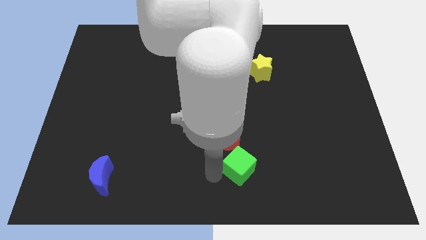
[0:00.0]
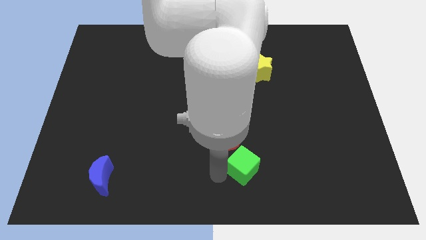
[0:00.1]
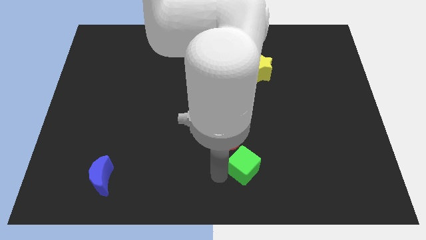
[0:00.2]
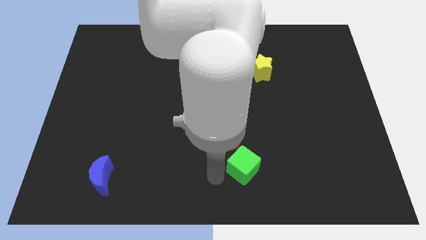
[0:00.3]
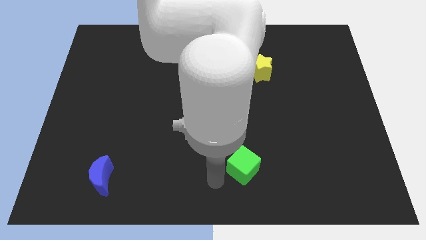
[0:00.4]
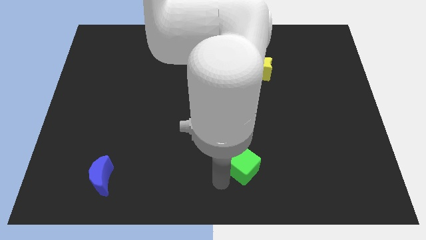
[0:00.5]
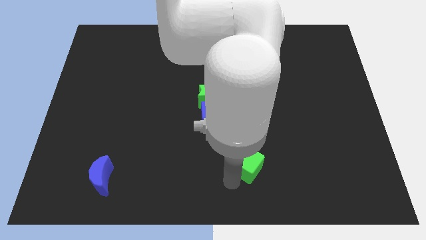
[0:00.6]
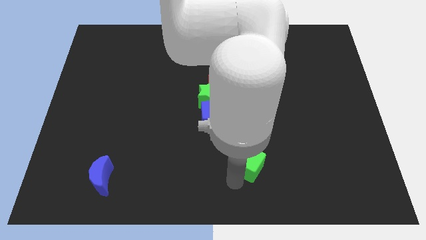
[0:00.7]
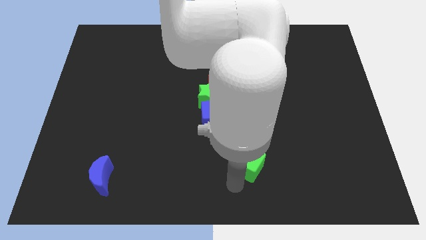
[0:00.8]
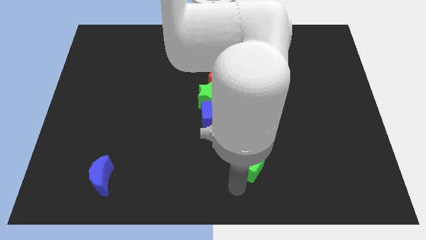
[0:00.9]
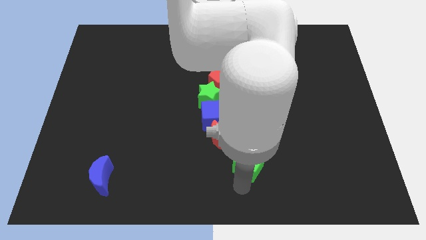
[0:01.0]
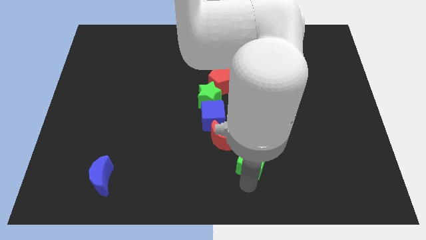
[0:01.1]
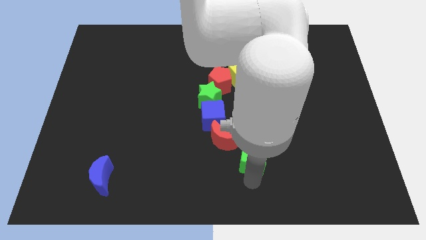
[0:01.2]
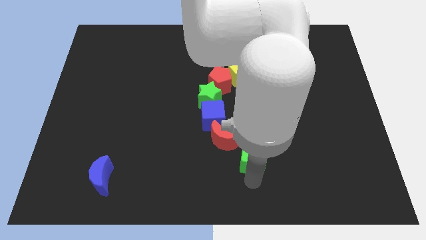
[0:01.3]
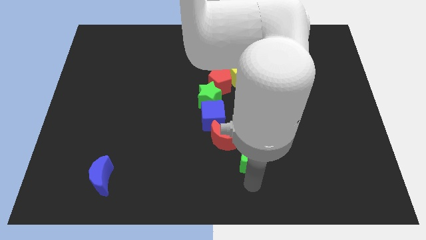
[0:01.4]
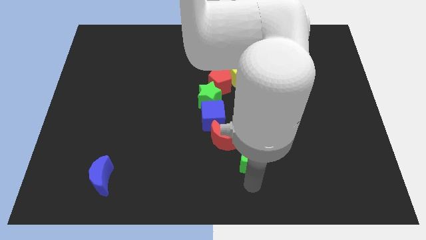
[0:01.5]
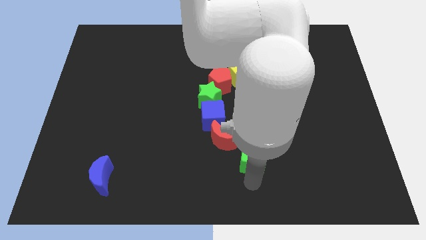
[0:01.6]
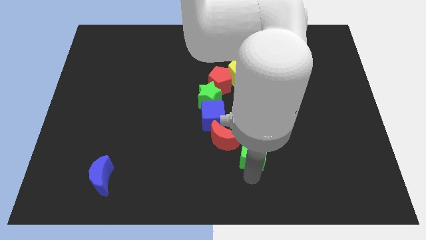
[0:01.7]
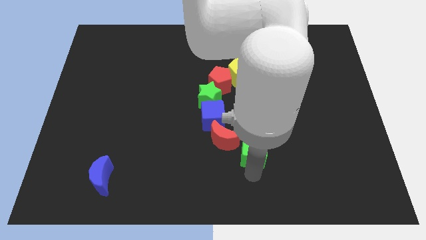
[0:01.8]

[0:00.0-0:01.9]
place the green cube vertically below the yellow blocks

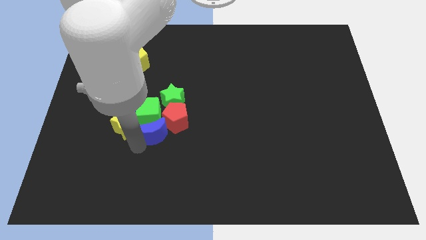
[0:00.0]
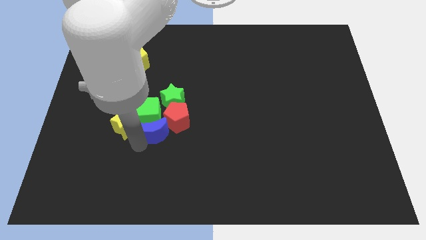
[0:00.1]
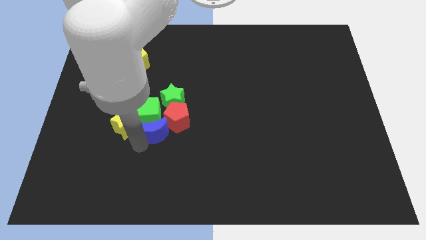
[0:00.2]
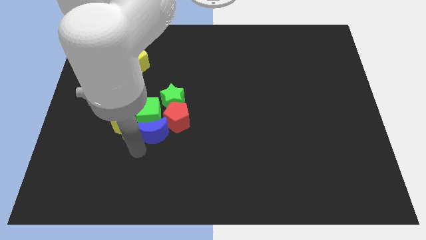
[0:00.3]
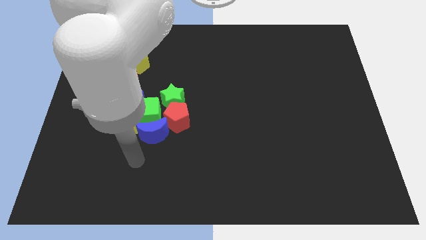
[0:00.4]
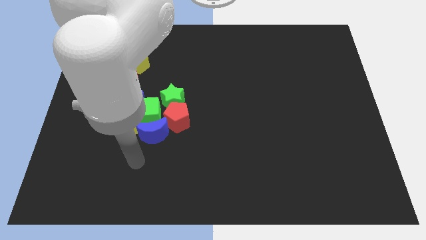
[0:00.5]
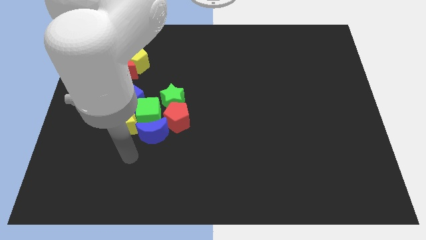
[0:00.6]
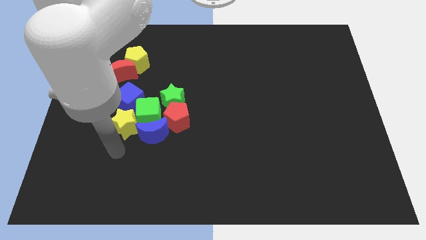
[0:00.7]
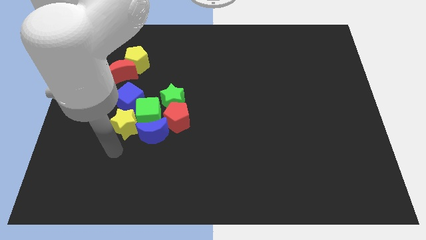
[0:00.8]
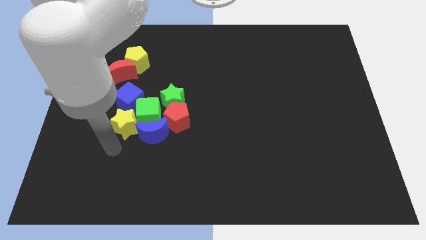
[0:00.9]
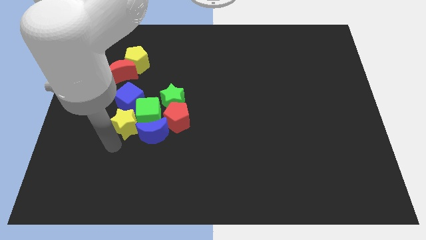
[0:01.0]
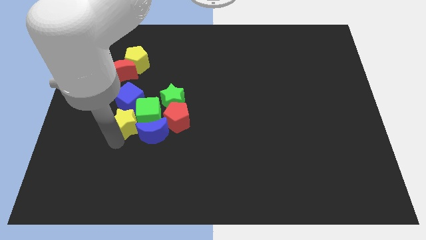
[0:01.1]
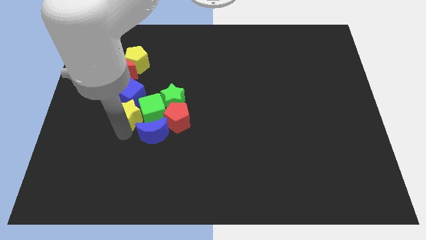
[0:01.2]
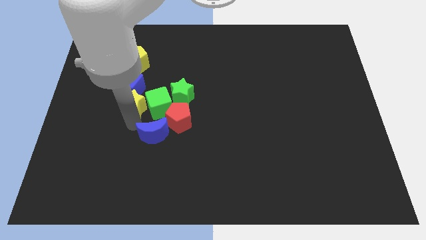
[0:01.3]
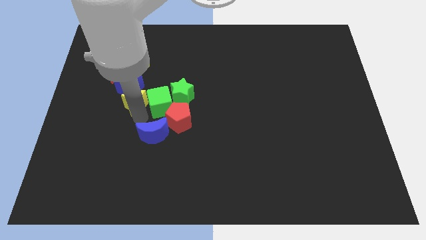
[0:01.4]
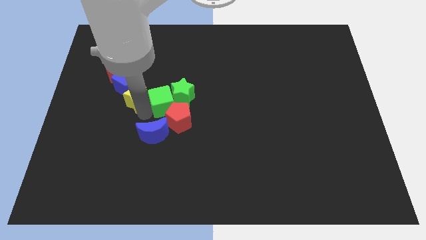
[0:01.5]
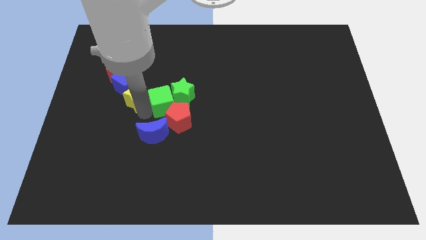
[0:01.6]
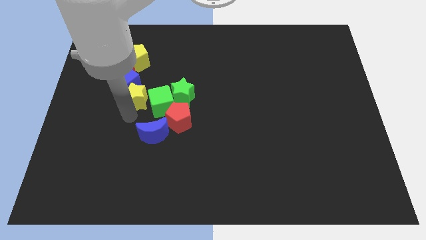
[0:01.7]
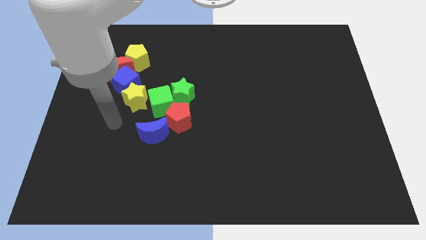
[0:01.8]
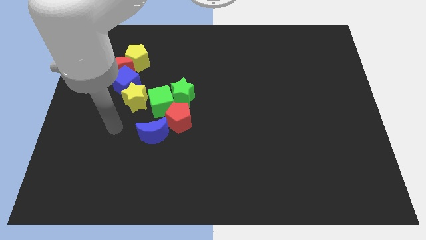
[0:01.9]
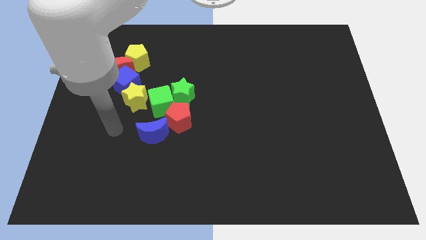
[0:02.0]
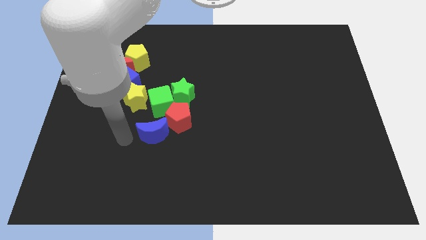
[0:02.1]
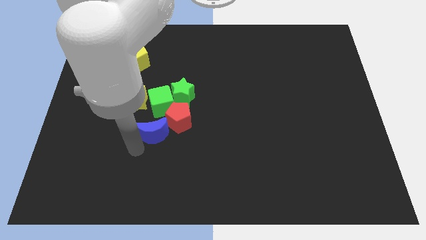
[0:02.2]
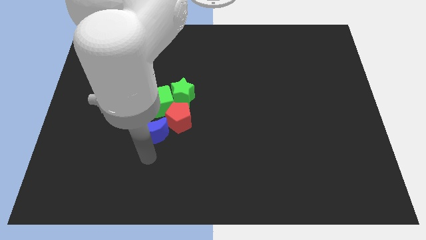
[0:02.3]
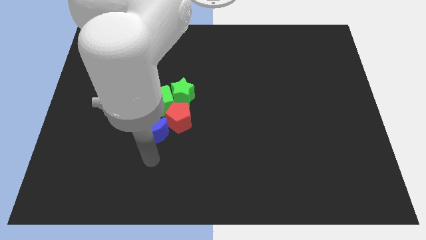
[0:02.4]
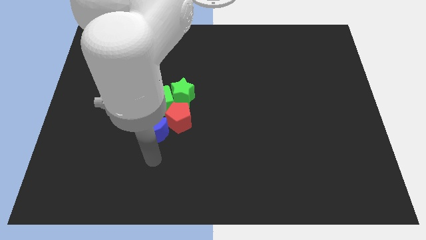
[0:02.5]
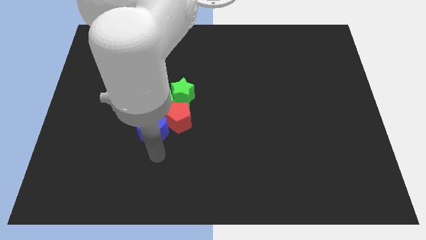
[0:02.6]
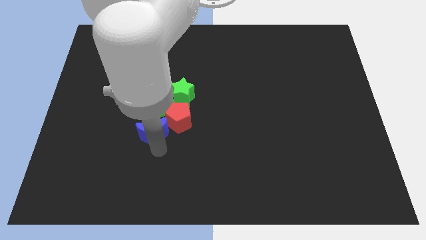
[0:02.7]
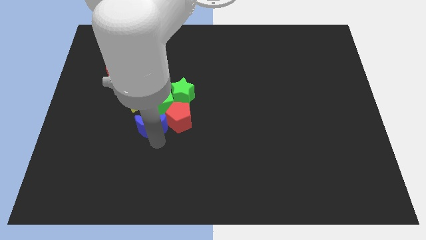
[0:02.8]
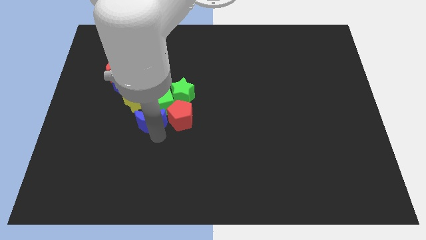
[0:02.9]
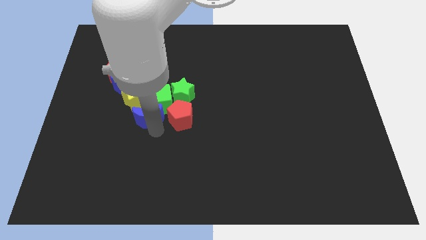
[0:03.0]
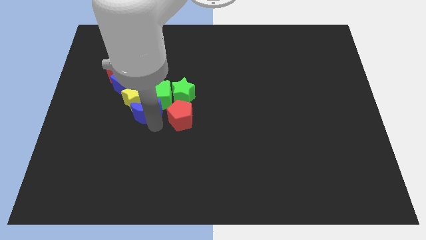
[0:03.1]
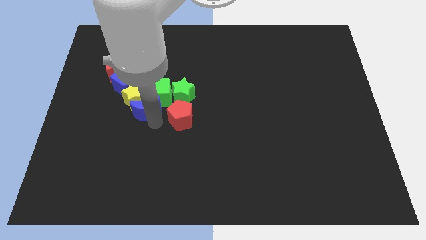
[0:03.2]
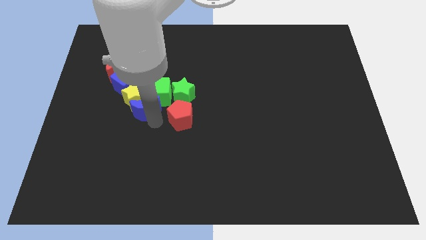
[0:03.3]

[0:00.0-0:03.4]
move the group of blocks slightly upwards

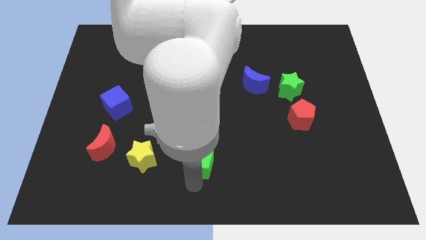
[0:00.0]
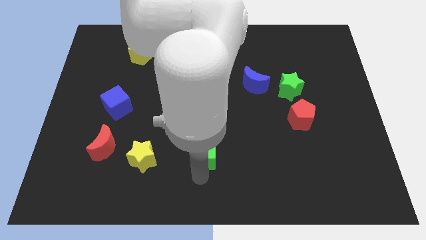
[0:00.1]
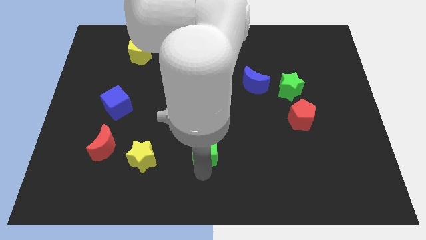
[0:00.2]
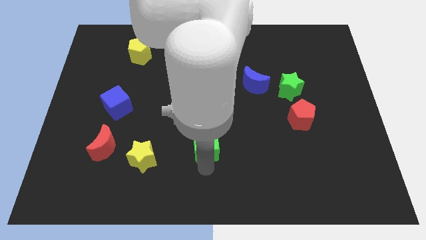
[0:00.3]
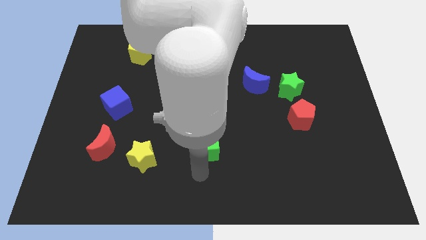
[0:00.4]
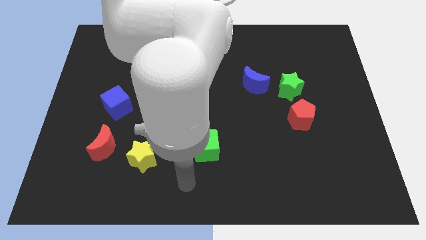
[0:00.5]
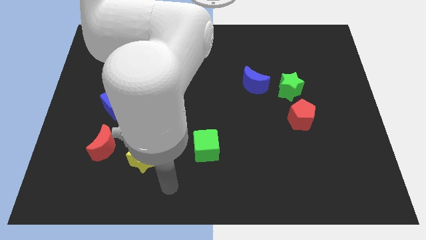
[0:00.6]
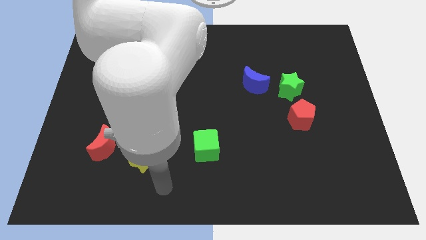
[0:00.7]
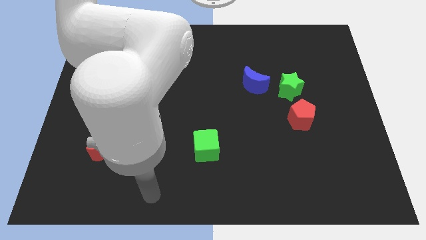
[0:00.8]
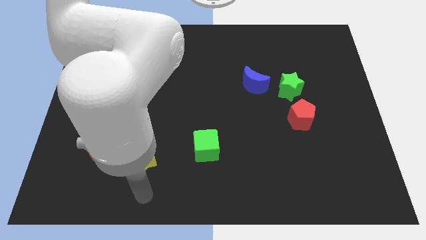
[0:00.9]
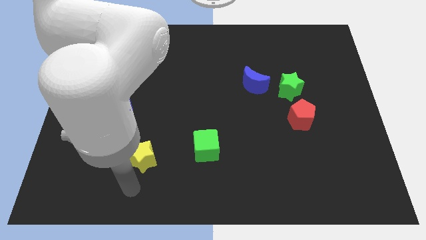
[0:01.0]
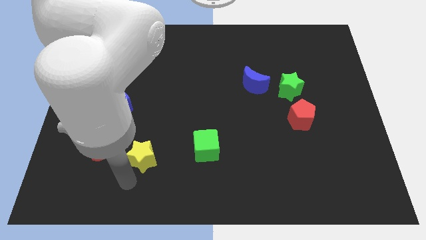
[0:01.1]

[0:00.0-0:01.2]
push the green cube towards the top side of the board

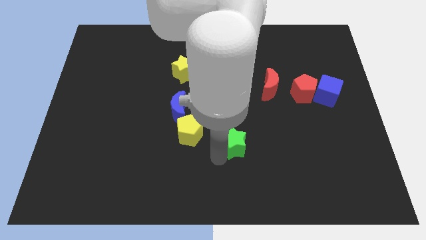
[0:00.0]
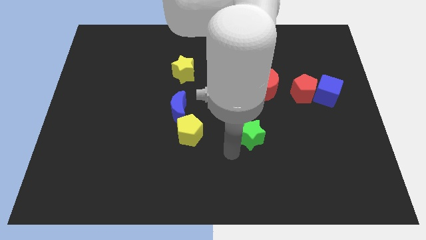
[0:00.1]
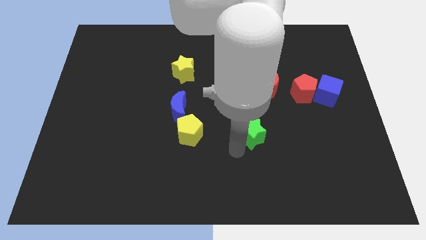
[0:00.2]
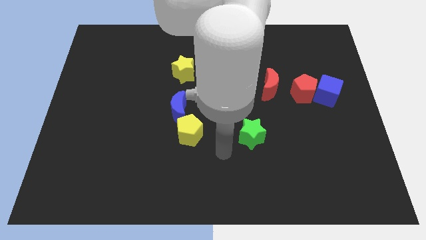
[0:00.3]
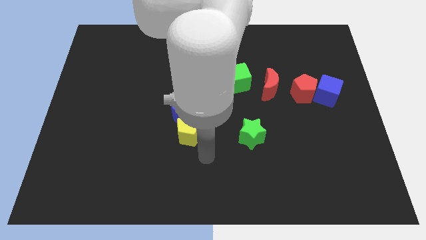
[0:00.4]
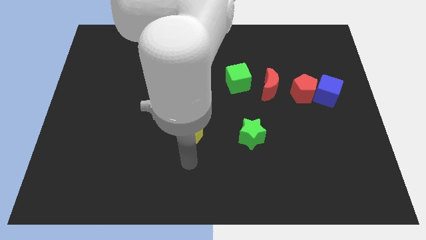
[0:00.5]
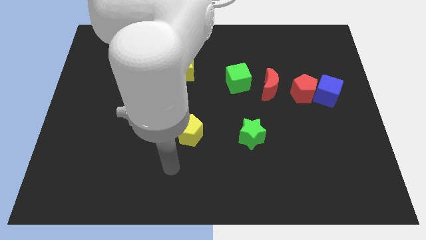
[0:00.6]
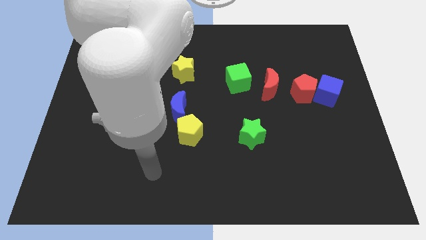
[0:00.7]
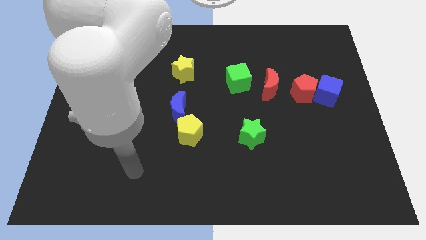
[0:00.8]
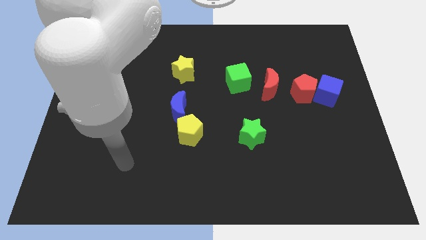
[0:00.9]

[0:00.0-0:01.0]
place the green star horizontally to the yellow pentagon

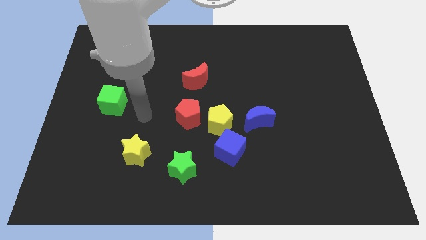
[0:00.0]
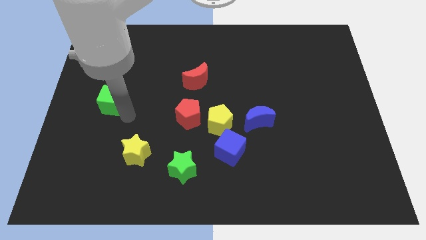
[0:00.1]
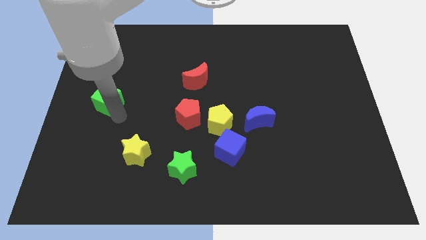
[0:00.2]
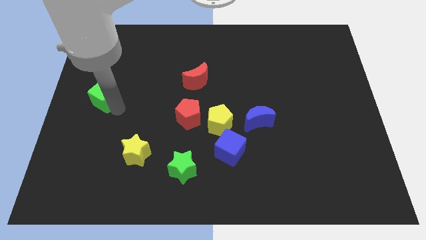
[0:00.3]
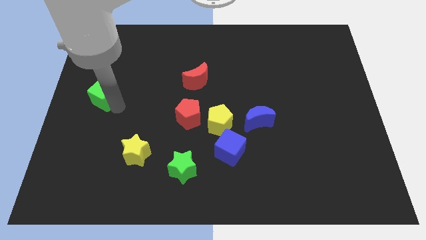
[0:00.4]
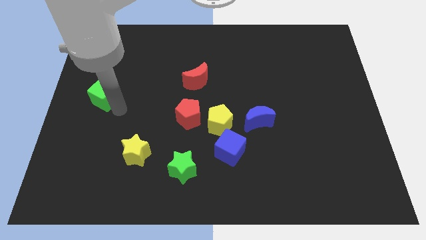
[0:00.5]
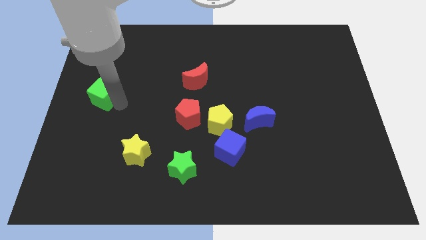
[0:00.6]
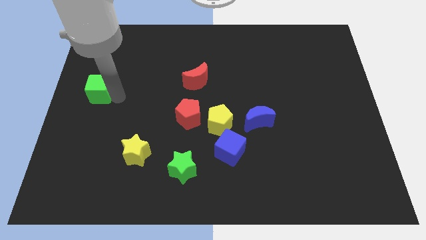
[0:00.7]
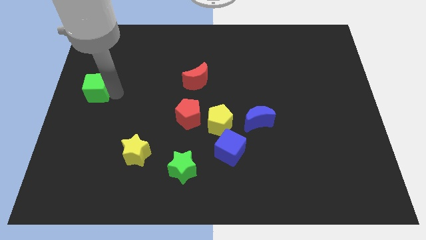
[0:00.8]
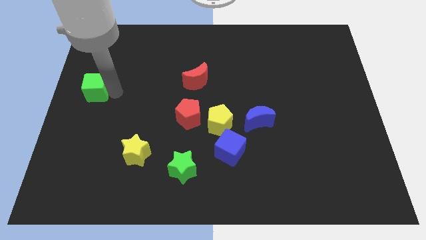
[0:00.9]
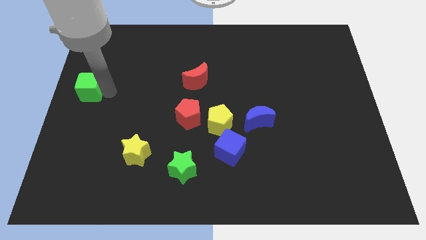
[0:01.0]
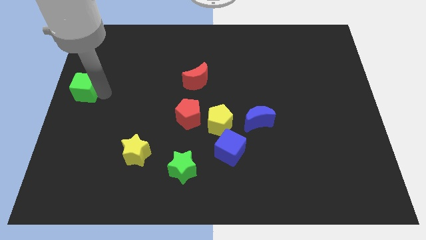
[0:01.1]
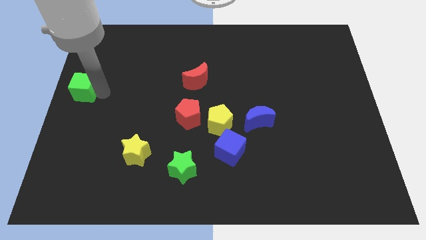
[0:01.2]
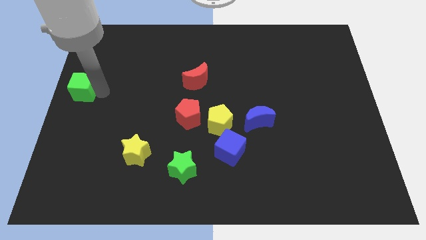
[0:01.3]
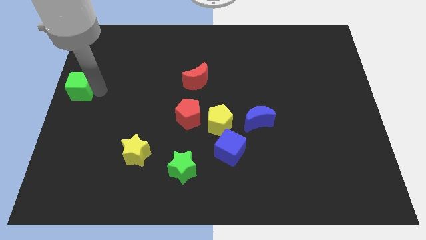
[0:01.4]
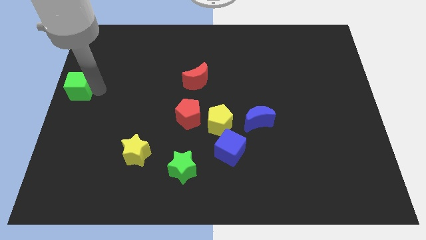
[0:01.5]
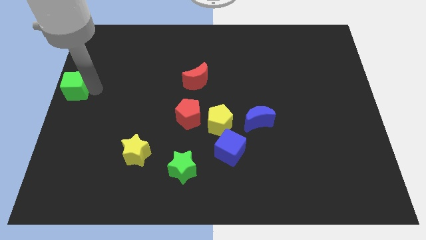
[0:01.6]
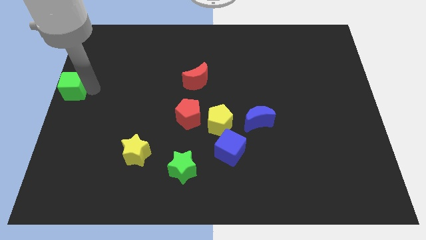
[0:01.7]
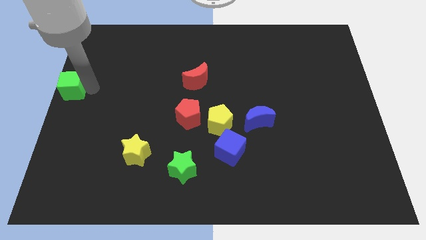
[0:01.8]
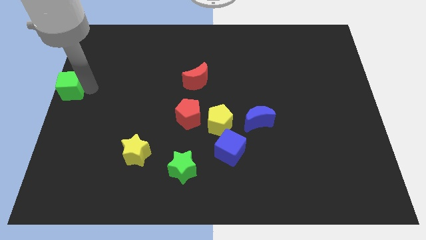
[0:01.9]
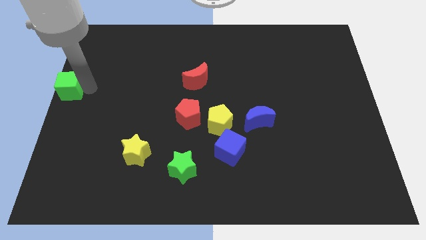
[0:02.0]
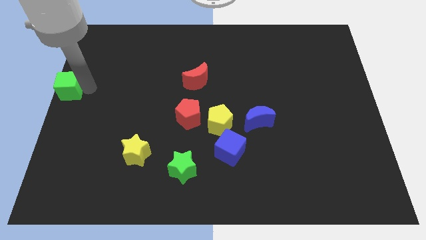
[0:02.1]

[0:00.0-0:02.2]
move the green cube to the center left of the board
